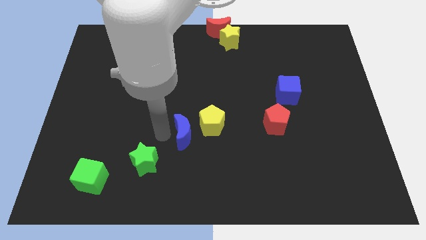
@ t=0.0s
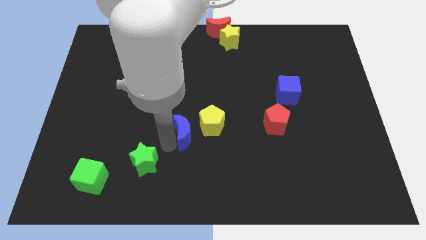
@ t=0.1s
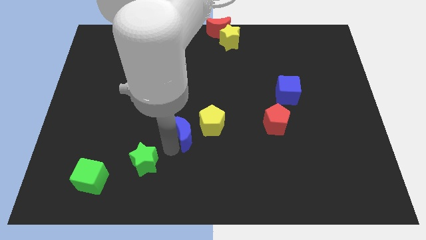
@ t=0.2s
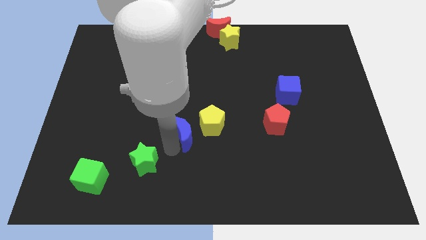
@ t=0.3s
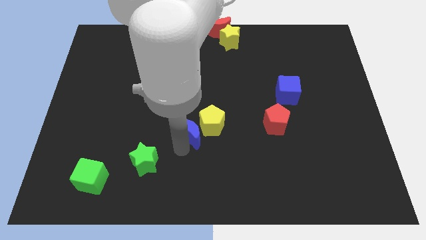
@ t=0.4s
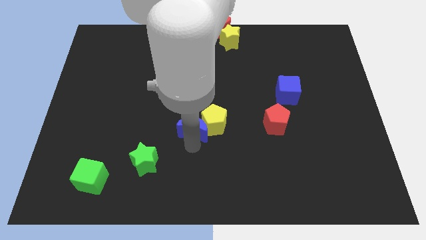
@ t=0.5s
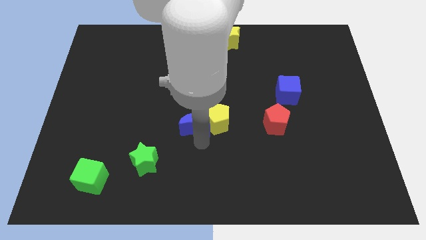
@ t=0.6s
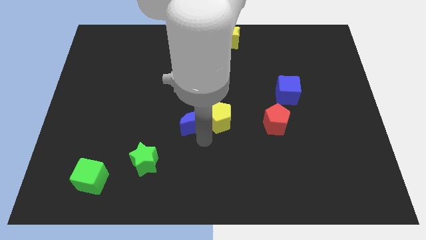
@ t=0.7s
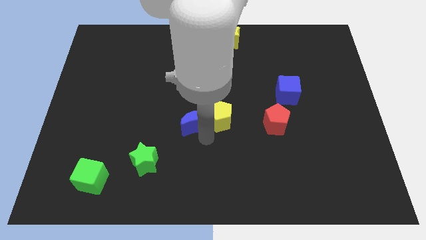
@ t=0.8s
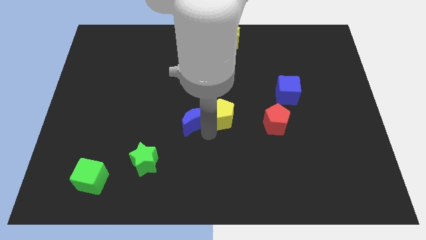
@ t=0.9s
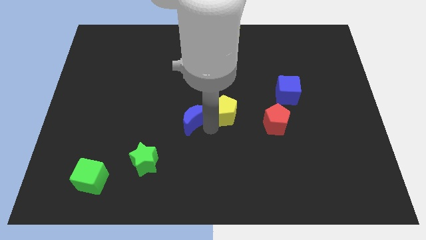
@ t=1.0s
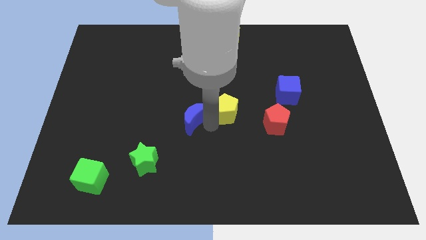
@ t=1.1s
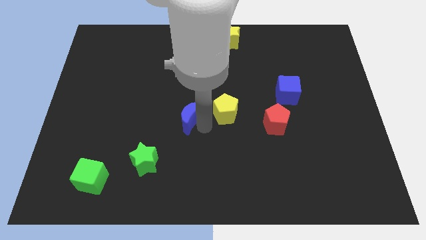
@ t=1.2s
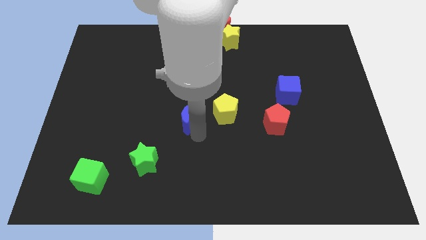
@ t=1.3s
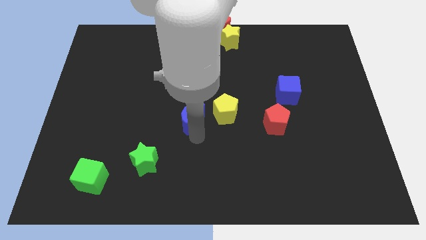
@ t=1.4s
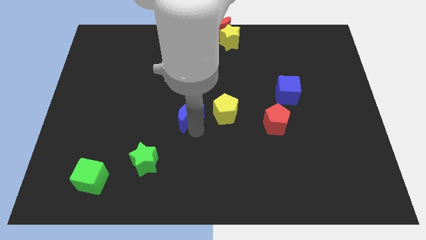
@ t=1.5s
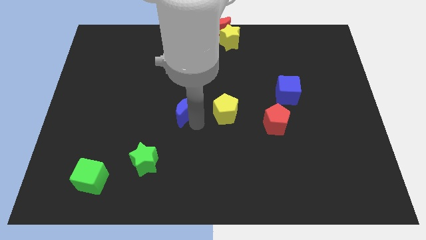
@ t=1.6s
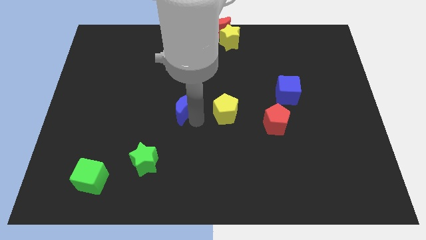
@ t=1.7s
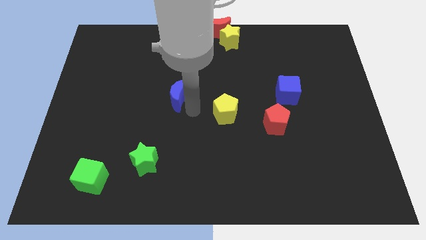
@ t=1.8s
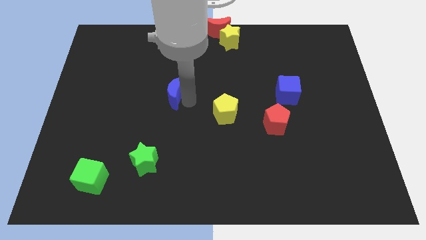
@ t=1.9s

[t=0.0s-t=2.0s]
slide the blue moon diagonally top left to the yellow pentagon

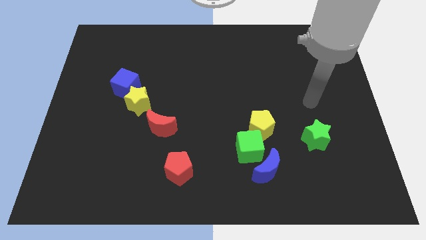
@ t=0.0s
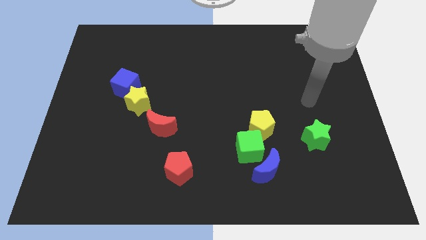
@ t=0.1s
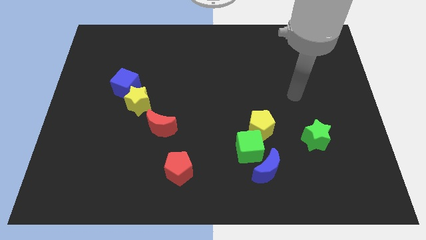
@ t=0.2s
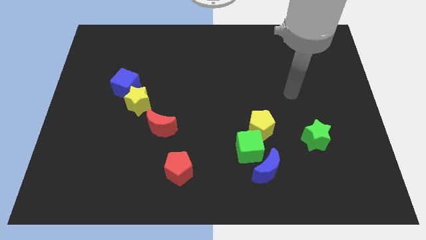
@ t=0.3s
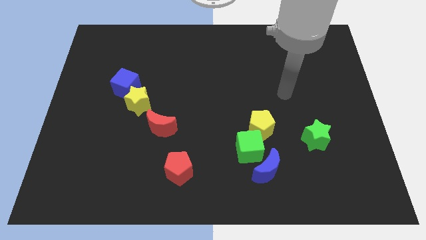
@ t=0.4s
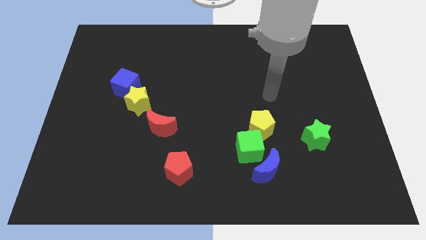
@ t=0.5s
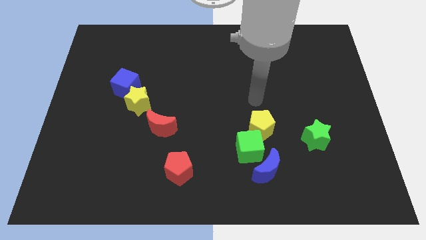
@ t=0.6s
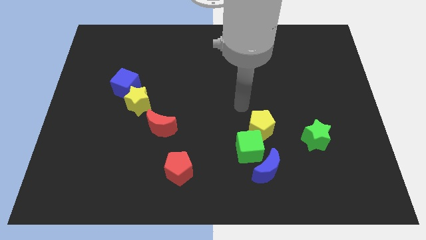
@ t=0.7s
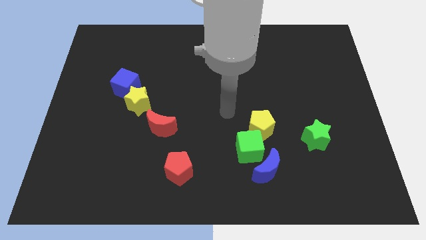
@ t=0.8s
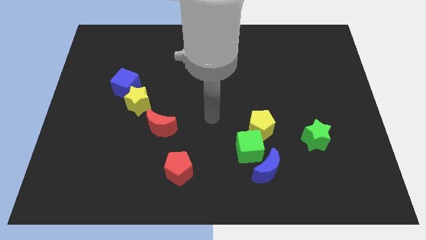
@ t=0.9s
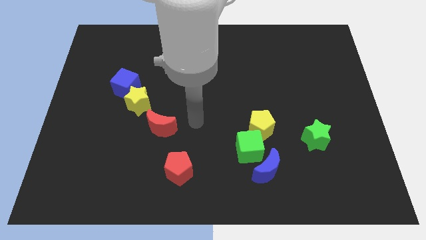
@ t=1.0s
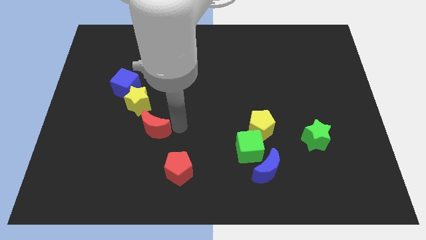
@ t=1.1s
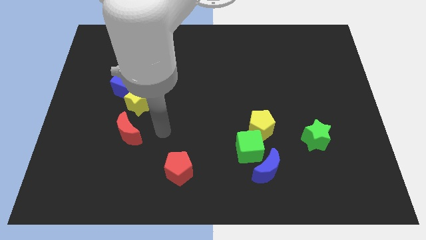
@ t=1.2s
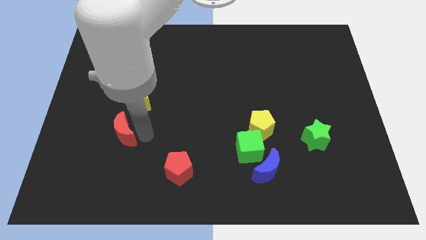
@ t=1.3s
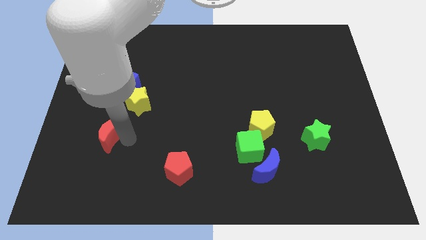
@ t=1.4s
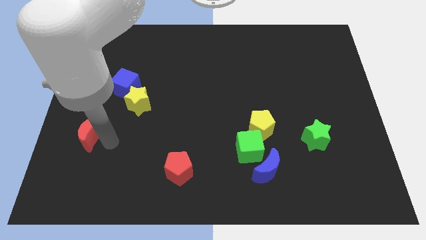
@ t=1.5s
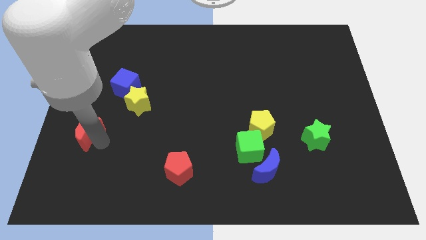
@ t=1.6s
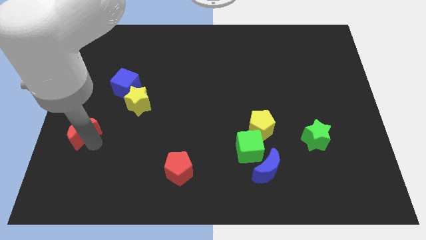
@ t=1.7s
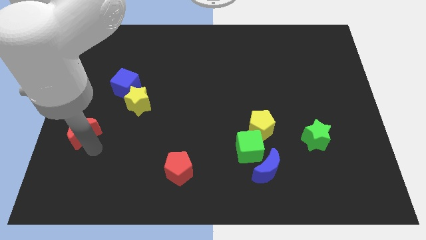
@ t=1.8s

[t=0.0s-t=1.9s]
push the red moon to the left side

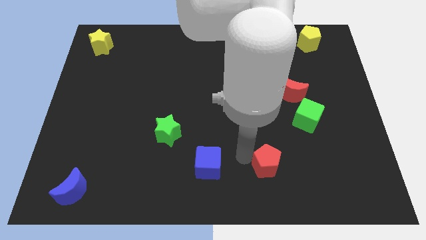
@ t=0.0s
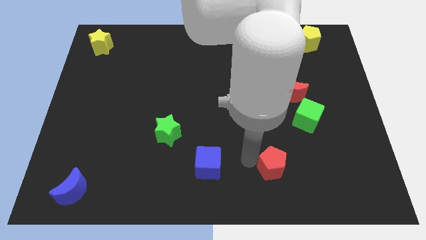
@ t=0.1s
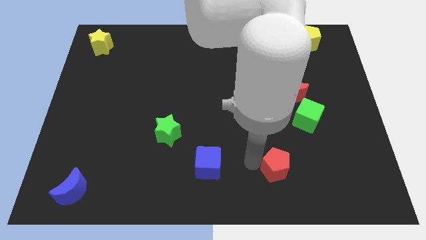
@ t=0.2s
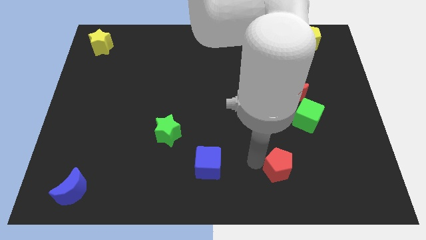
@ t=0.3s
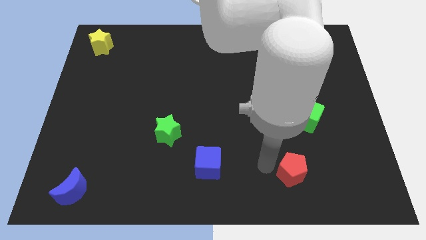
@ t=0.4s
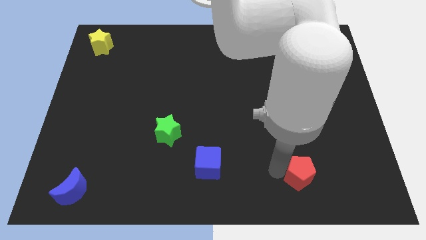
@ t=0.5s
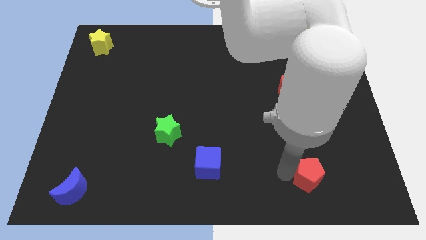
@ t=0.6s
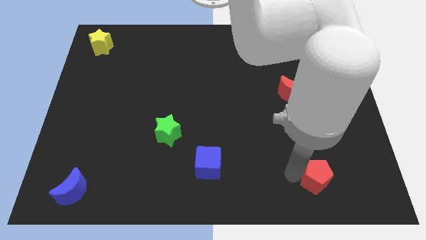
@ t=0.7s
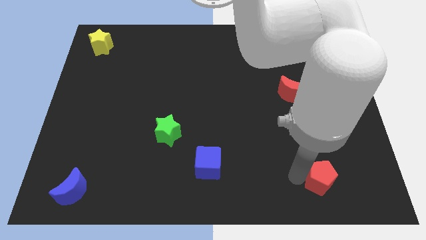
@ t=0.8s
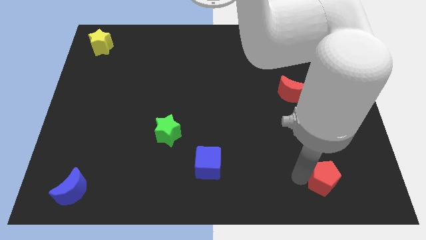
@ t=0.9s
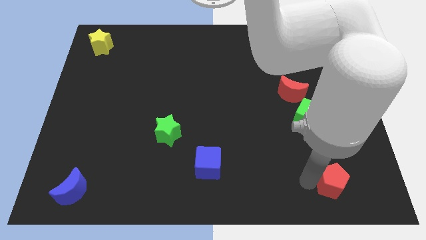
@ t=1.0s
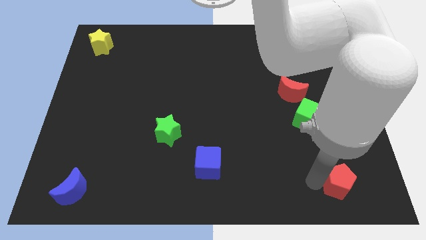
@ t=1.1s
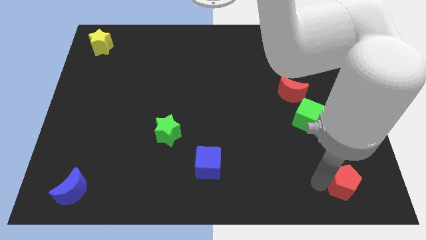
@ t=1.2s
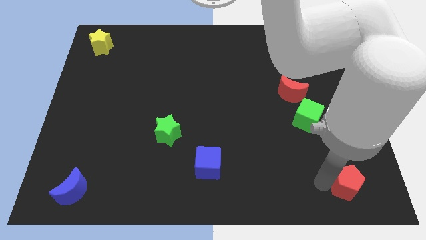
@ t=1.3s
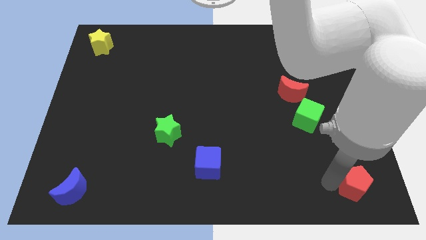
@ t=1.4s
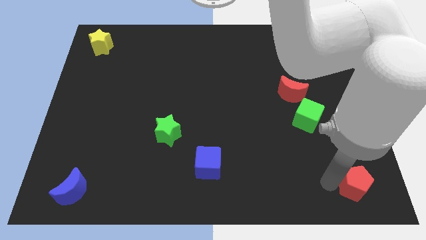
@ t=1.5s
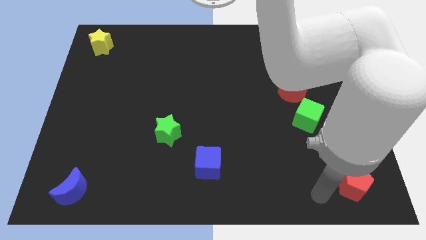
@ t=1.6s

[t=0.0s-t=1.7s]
move the red pentagon towards the bottom right of the board

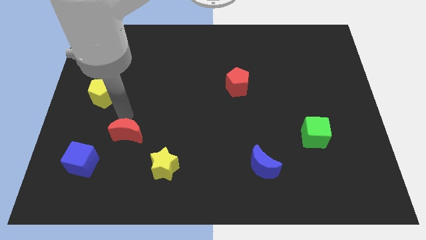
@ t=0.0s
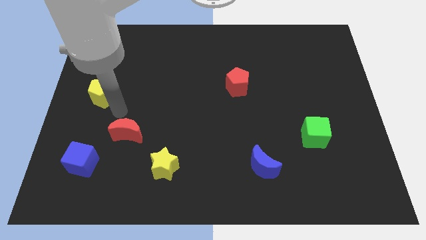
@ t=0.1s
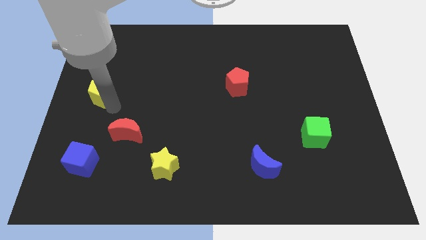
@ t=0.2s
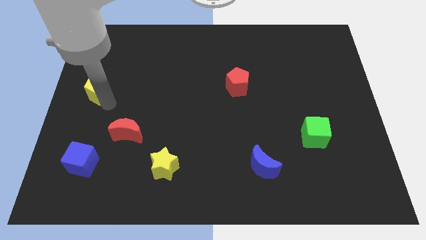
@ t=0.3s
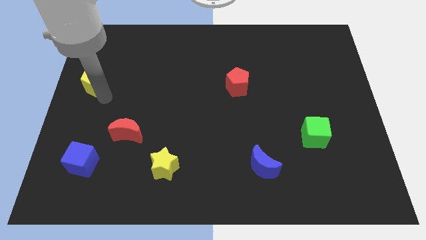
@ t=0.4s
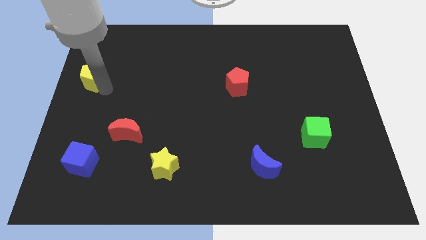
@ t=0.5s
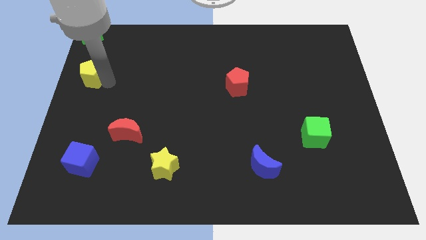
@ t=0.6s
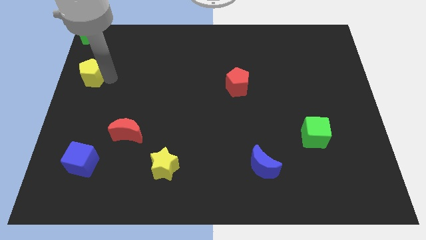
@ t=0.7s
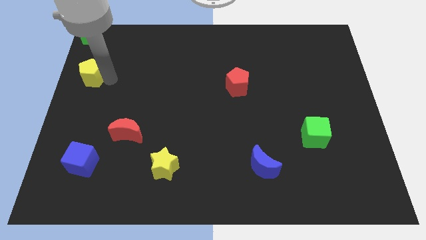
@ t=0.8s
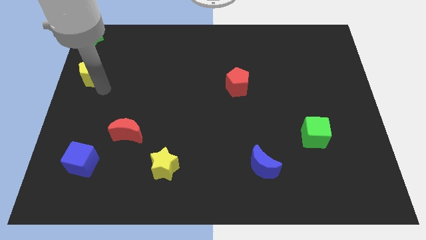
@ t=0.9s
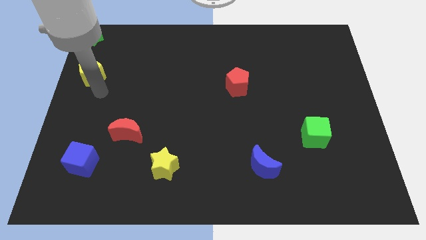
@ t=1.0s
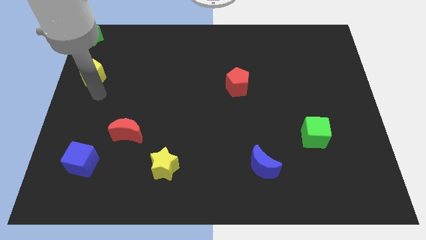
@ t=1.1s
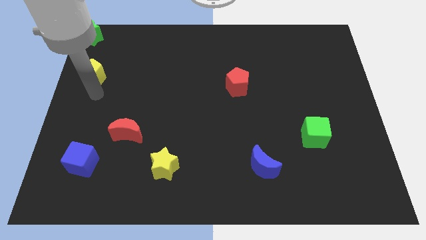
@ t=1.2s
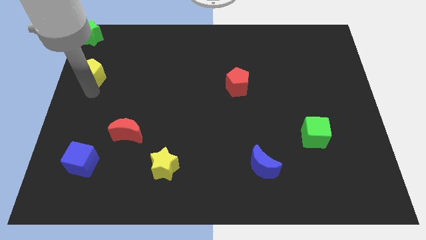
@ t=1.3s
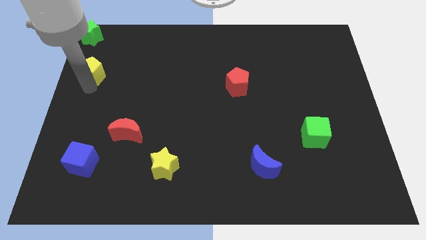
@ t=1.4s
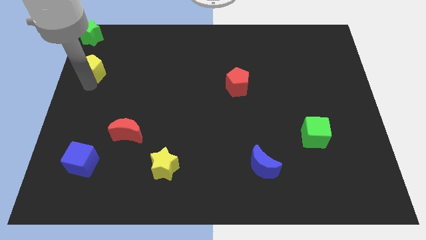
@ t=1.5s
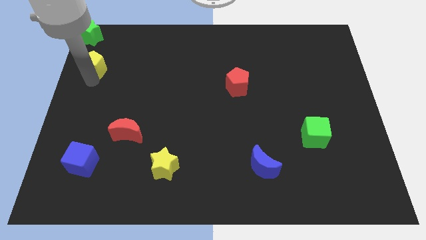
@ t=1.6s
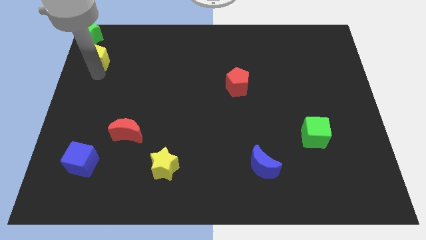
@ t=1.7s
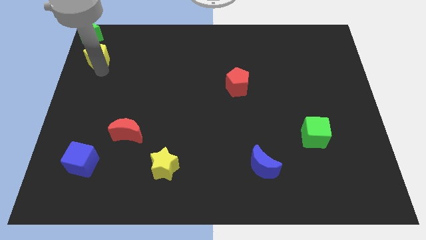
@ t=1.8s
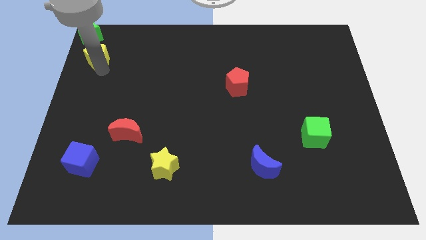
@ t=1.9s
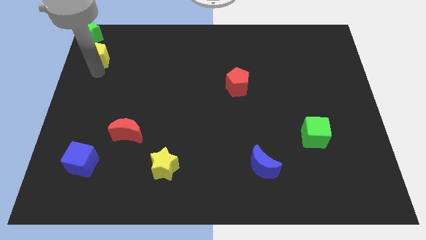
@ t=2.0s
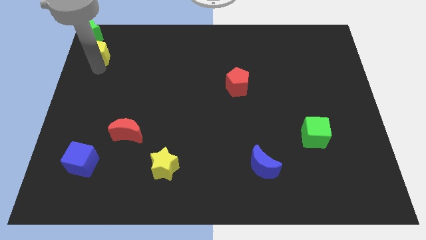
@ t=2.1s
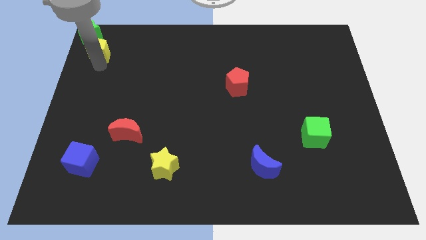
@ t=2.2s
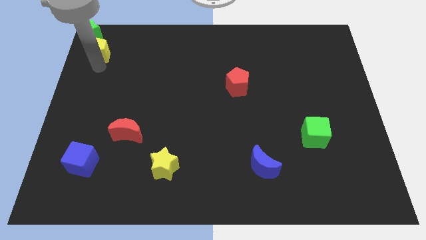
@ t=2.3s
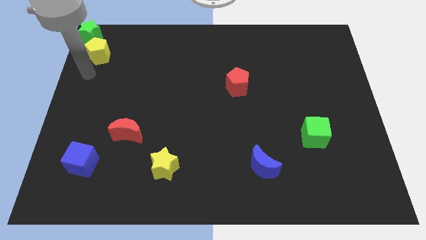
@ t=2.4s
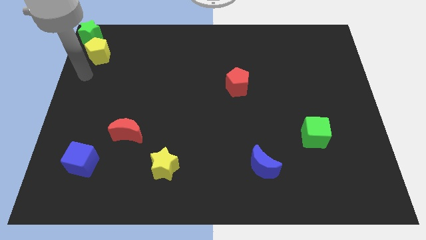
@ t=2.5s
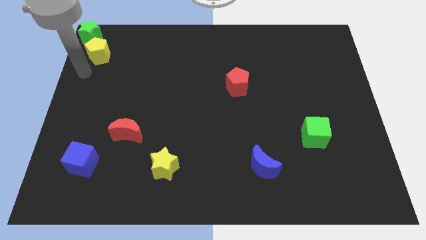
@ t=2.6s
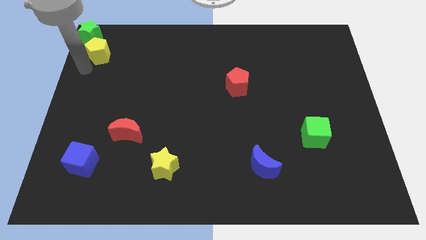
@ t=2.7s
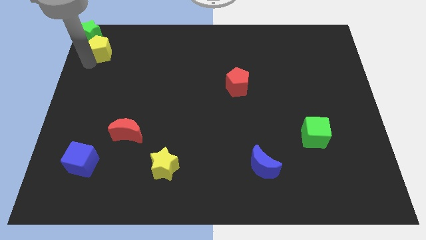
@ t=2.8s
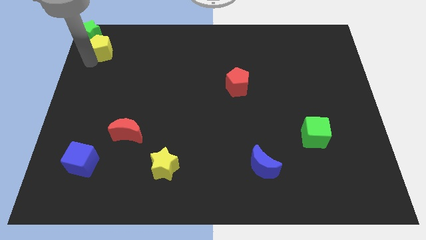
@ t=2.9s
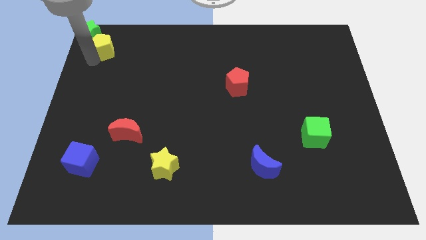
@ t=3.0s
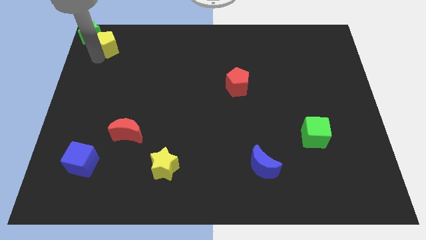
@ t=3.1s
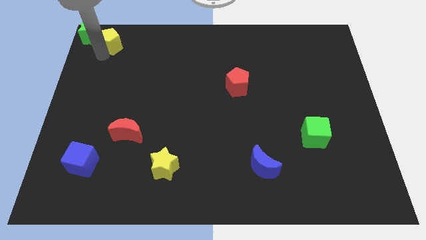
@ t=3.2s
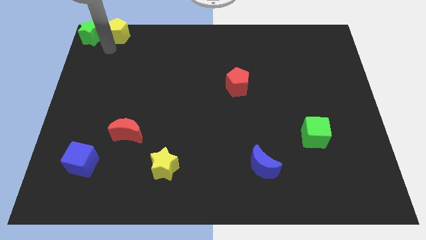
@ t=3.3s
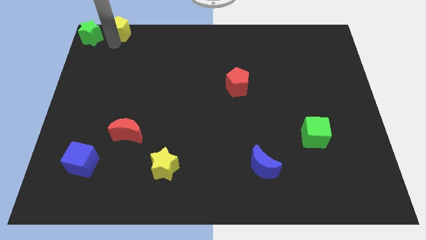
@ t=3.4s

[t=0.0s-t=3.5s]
put the yellow pentagon to the right side of the green star
